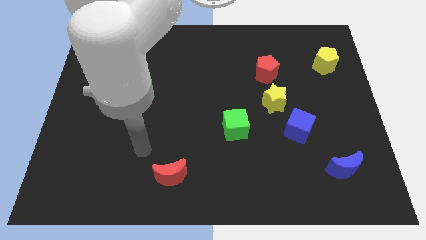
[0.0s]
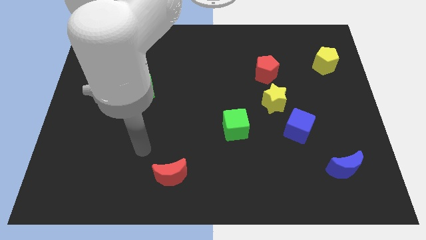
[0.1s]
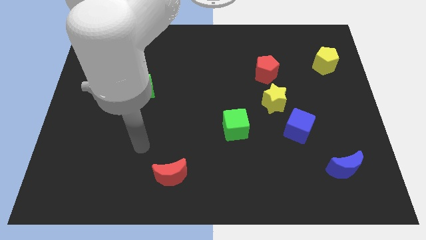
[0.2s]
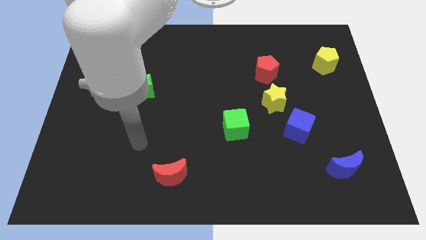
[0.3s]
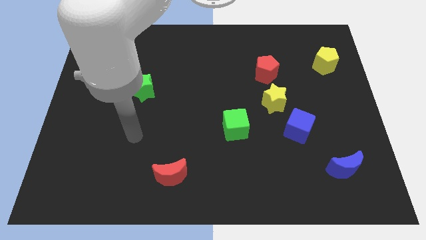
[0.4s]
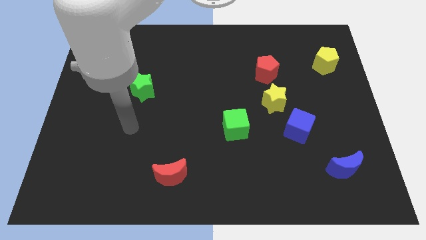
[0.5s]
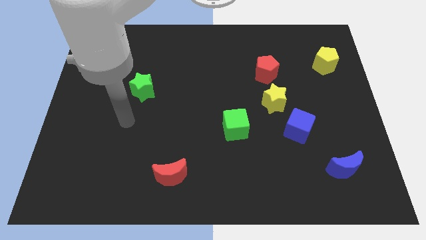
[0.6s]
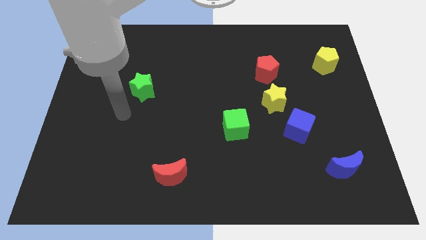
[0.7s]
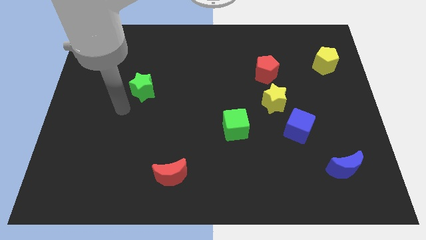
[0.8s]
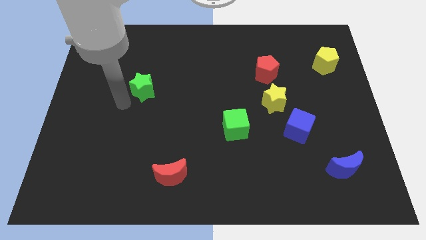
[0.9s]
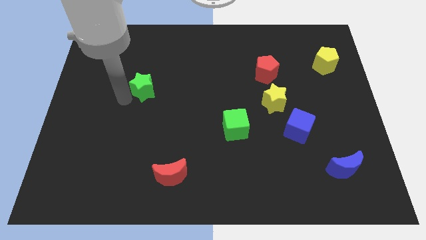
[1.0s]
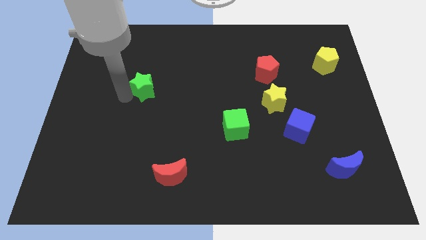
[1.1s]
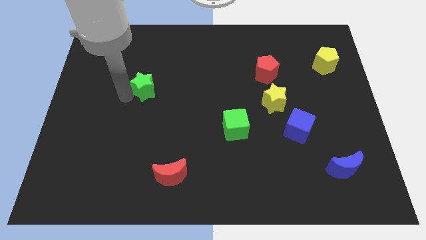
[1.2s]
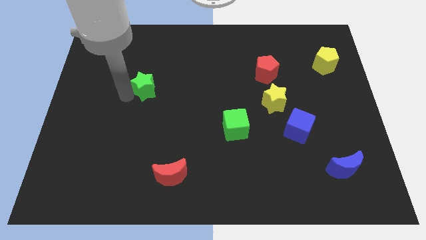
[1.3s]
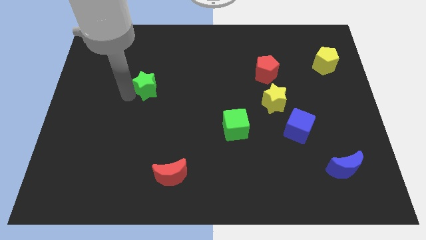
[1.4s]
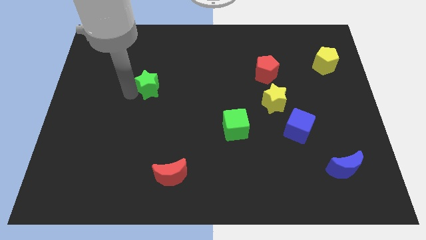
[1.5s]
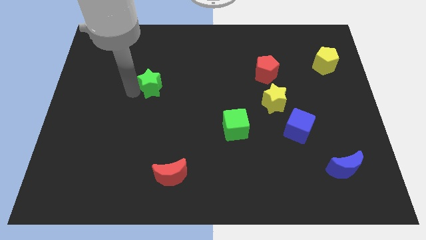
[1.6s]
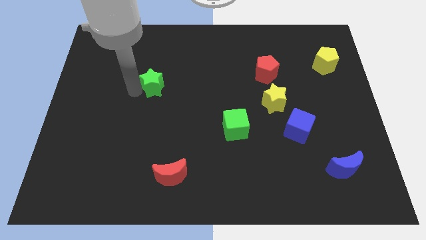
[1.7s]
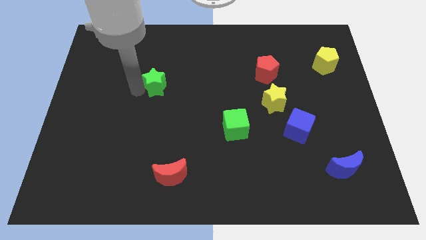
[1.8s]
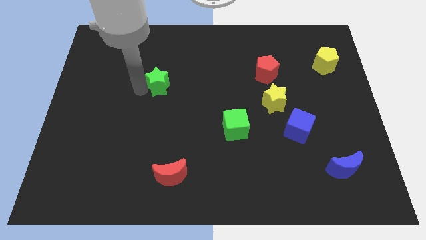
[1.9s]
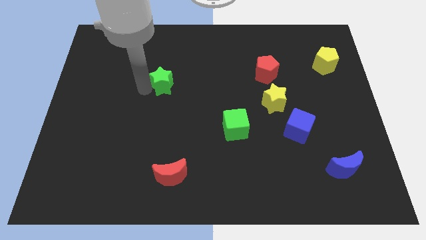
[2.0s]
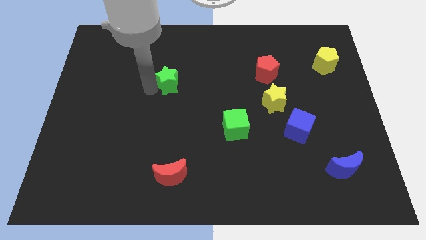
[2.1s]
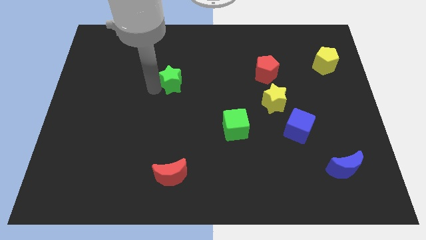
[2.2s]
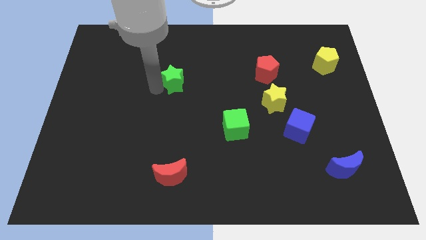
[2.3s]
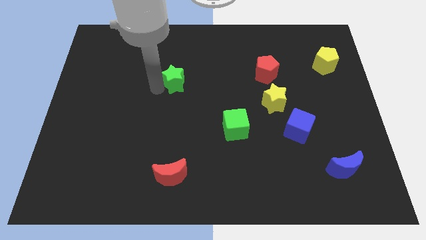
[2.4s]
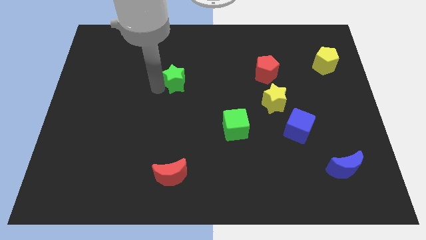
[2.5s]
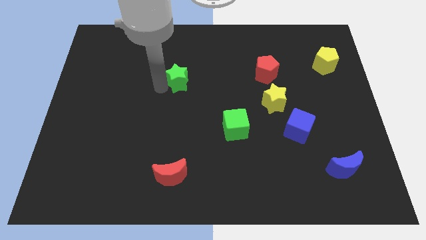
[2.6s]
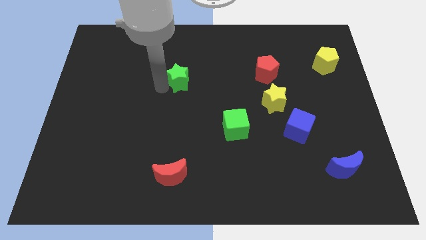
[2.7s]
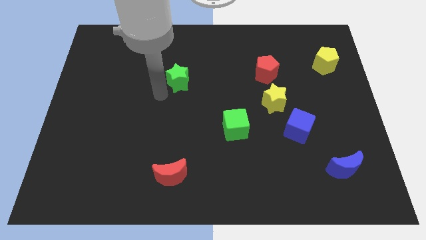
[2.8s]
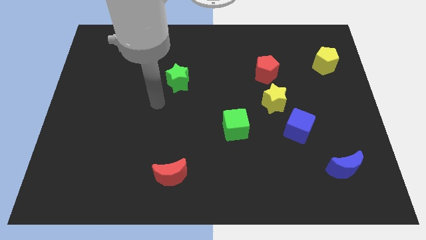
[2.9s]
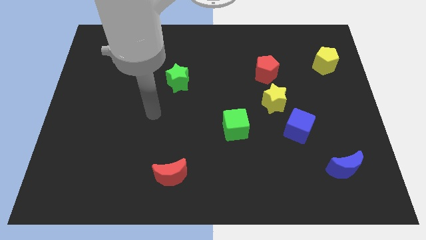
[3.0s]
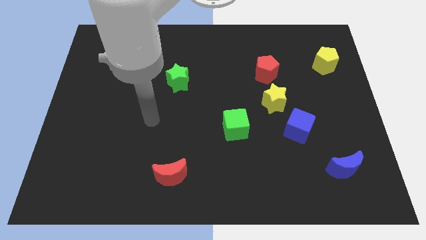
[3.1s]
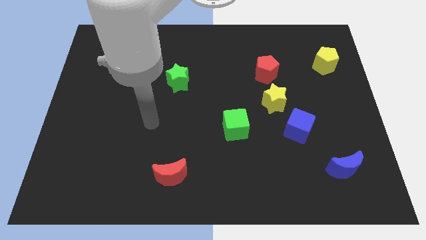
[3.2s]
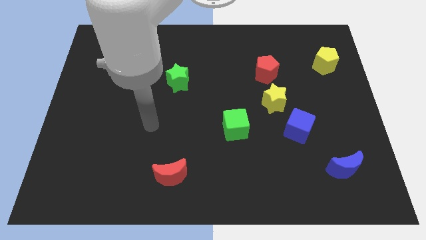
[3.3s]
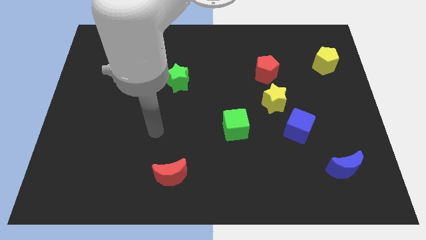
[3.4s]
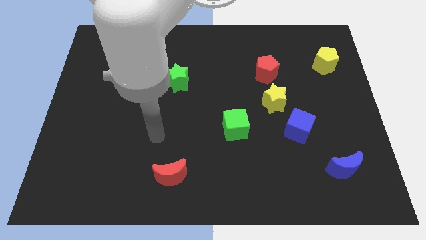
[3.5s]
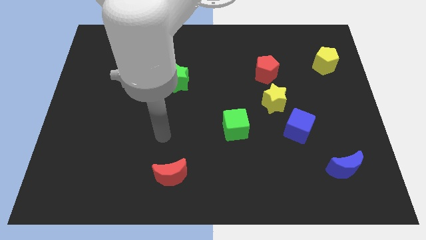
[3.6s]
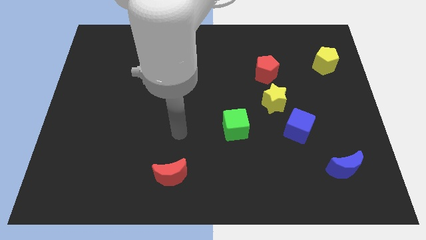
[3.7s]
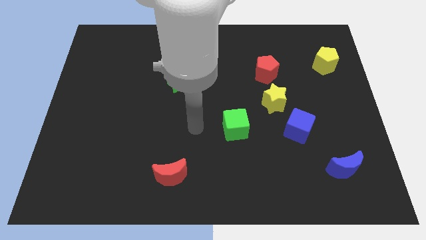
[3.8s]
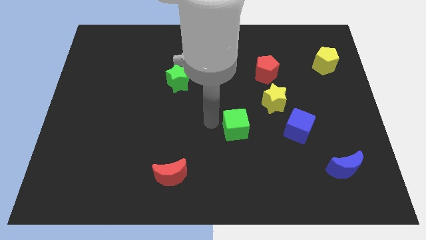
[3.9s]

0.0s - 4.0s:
drag green star towards top center of the board

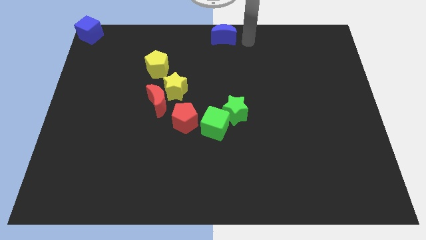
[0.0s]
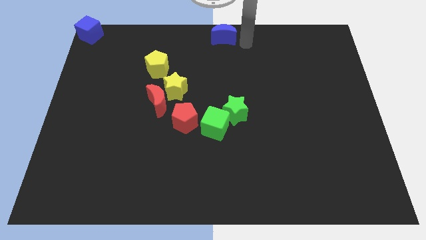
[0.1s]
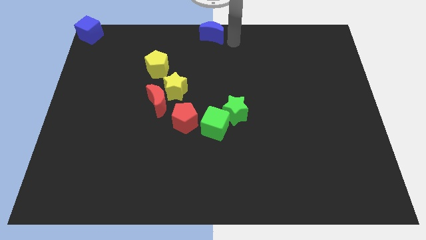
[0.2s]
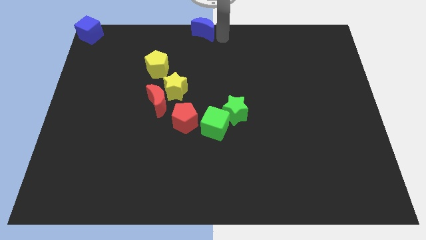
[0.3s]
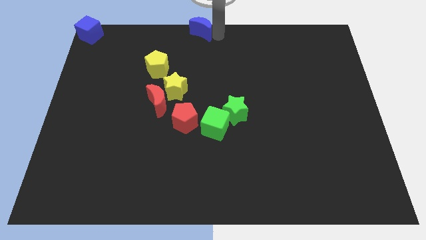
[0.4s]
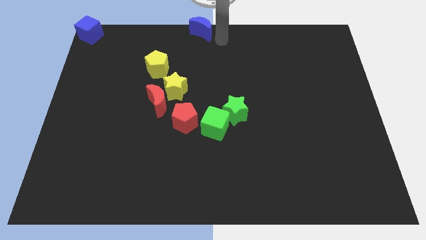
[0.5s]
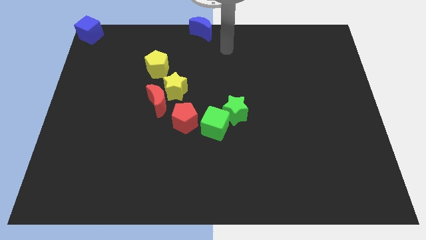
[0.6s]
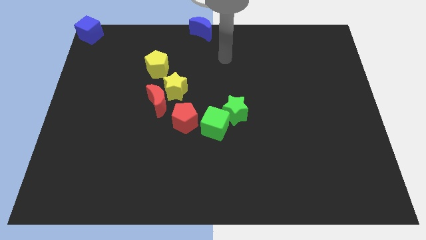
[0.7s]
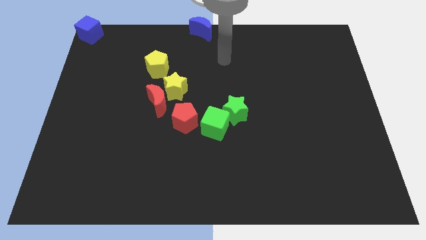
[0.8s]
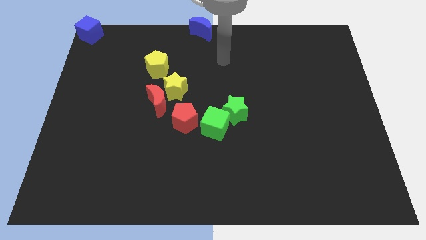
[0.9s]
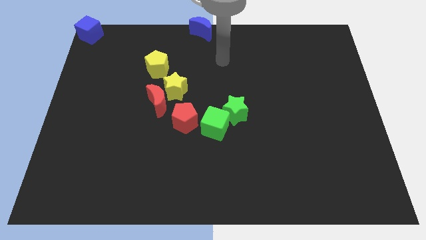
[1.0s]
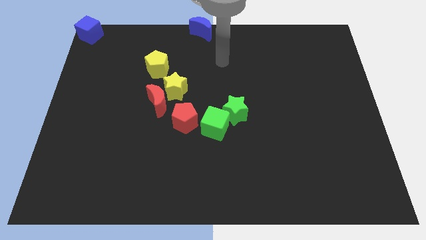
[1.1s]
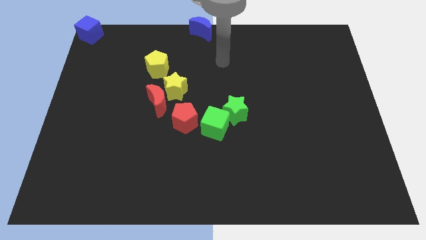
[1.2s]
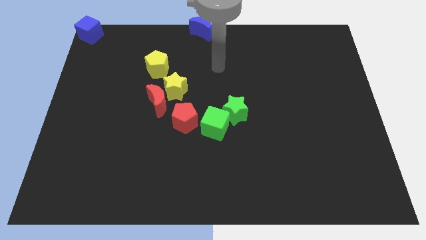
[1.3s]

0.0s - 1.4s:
push the blue moon to the left side

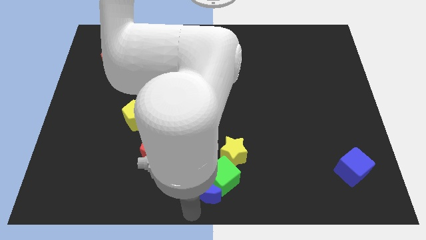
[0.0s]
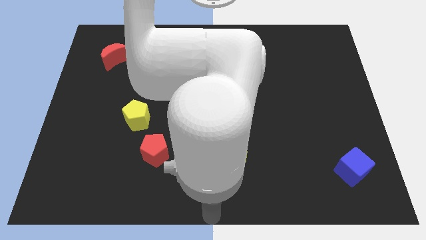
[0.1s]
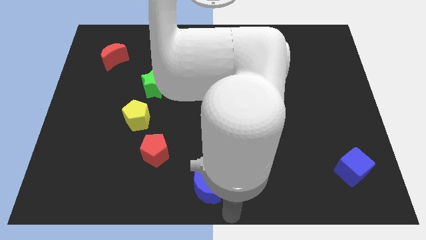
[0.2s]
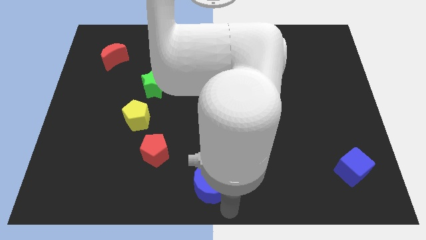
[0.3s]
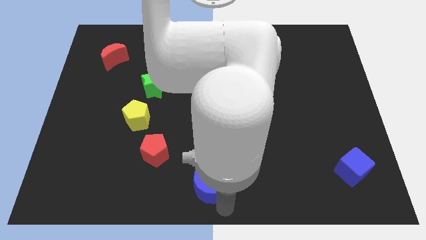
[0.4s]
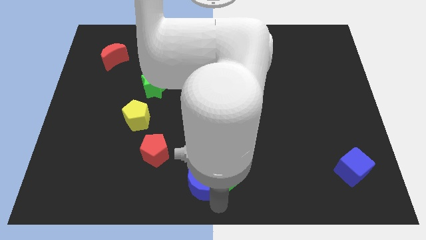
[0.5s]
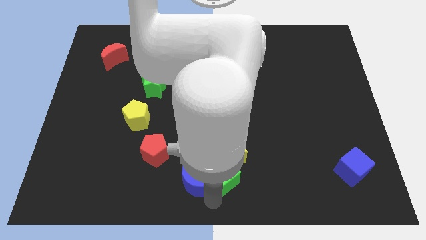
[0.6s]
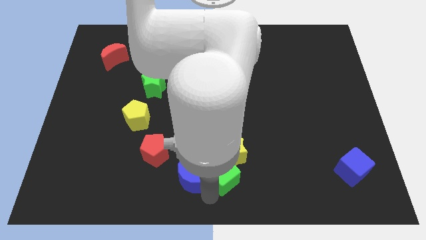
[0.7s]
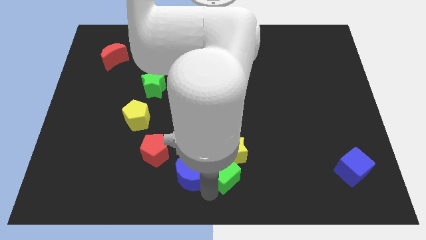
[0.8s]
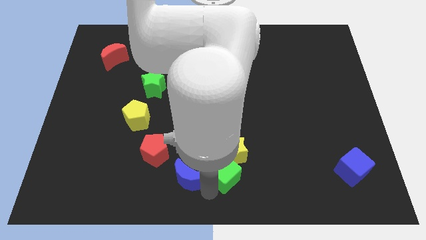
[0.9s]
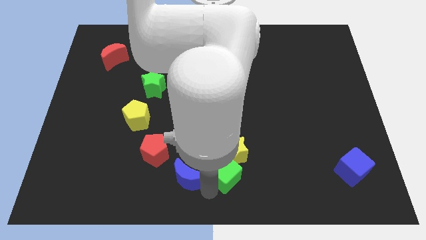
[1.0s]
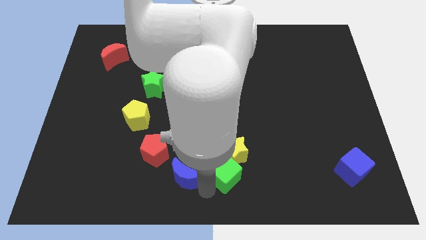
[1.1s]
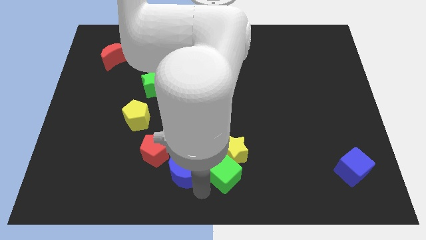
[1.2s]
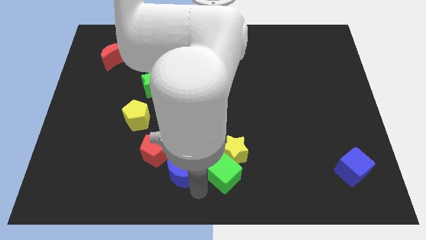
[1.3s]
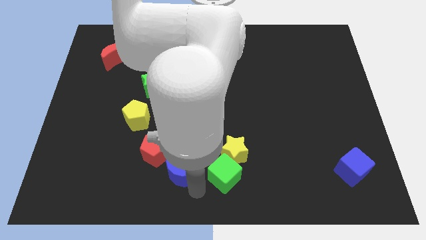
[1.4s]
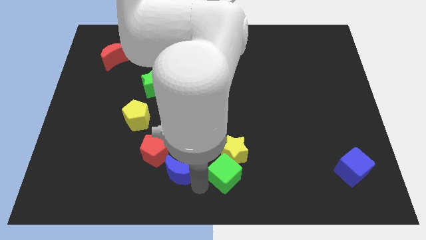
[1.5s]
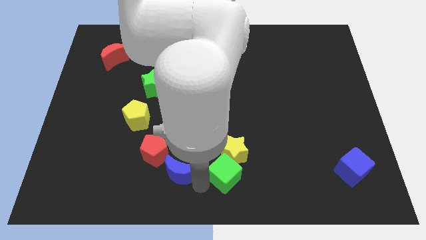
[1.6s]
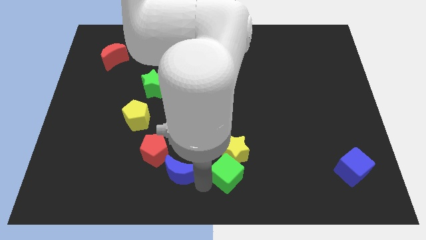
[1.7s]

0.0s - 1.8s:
place the blue crescent in between the green cube and red pentagon

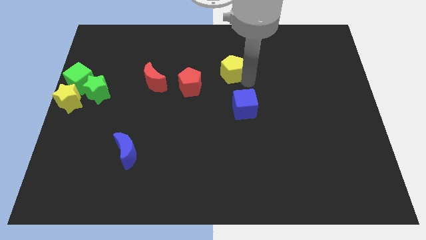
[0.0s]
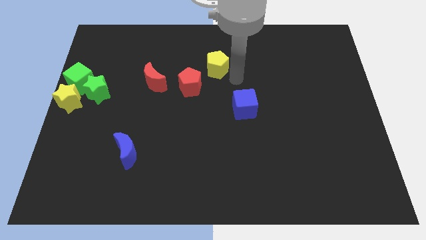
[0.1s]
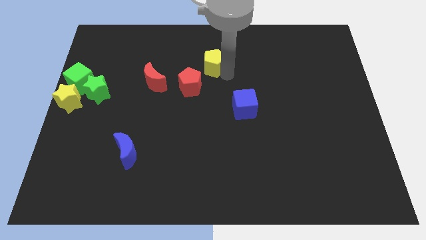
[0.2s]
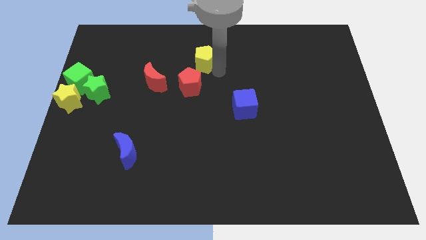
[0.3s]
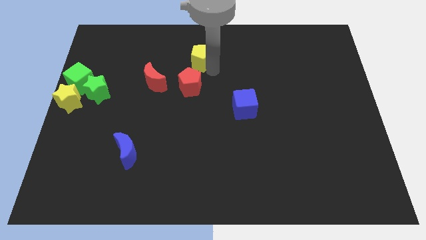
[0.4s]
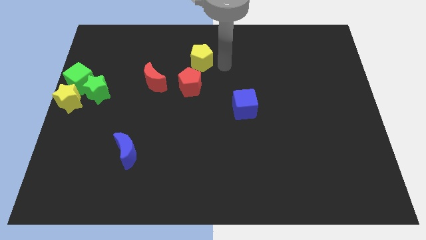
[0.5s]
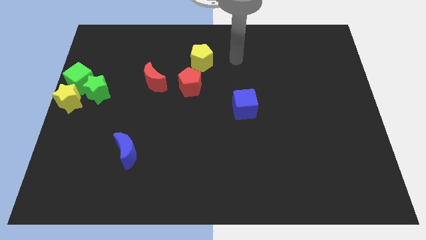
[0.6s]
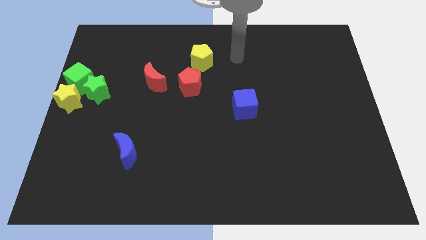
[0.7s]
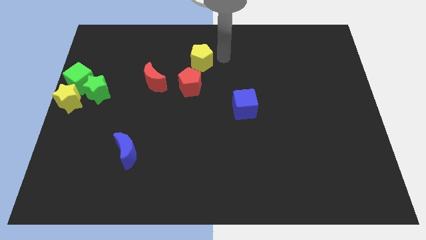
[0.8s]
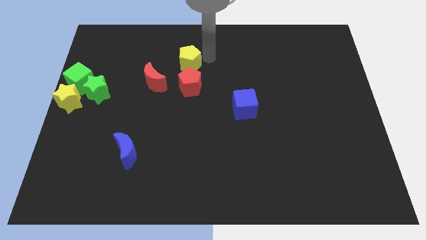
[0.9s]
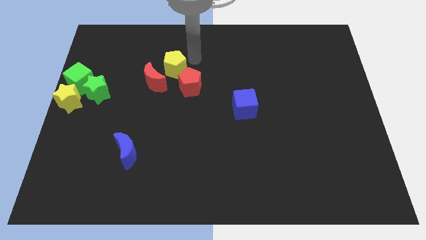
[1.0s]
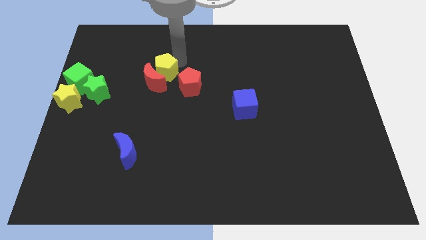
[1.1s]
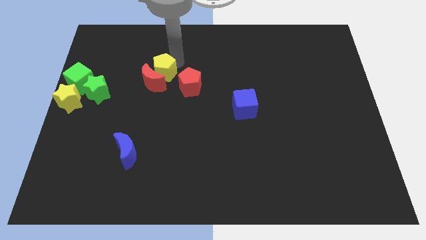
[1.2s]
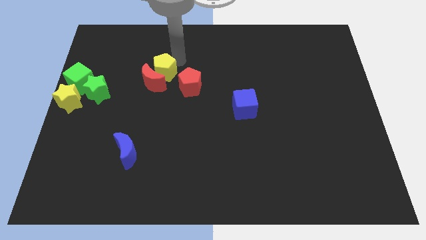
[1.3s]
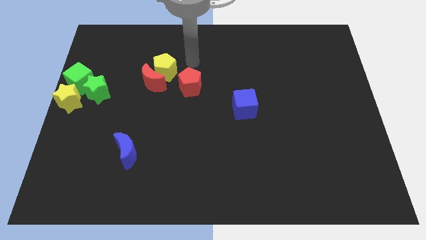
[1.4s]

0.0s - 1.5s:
move the yellow pentagon to the top of the red crescent

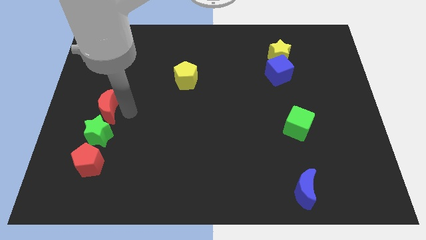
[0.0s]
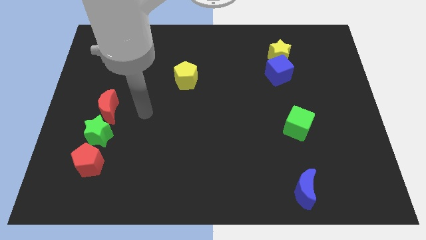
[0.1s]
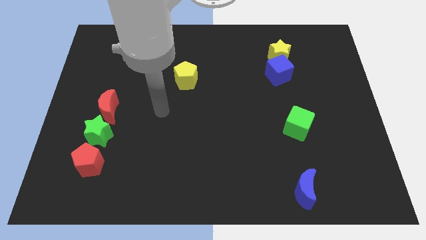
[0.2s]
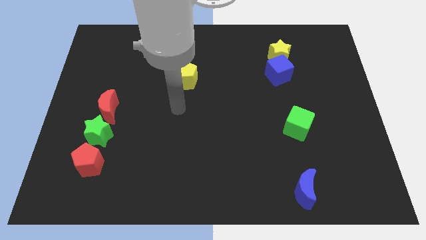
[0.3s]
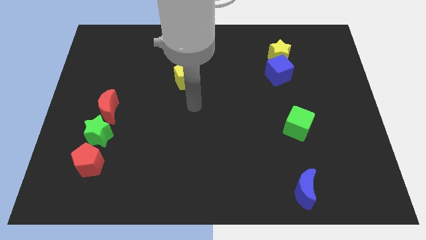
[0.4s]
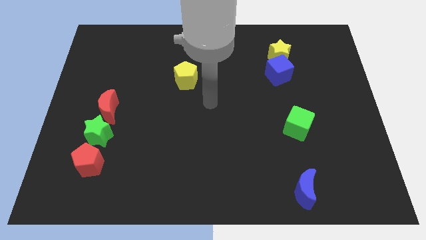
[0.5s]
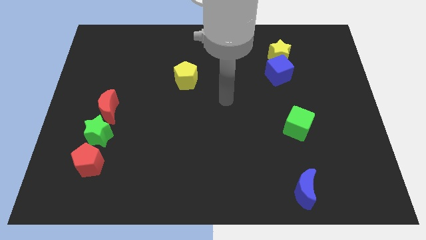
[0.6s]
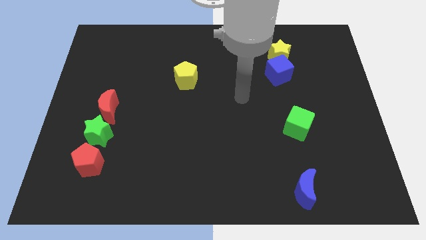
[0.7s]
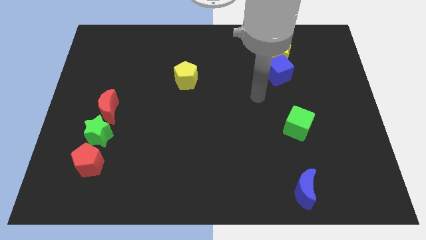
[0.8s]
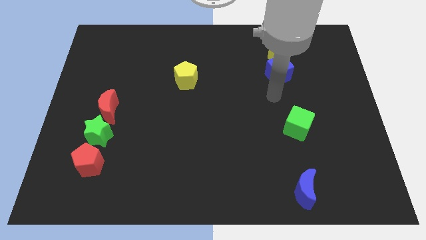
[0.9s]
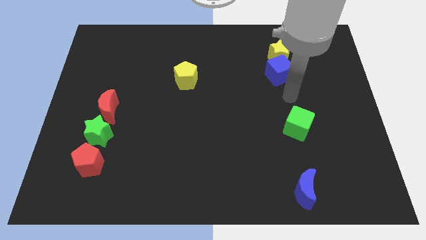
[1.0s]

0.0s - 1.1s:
move your arm to the top of the green cube
